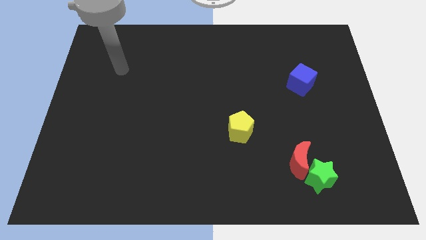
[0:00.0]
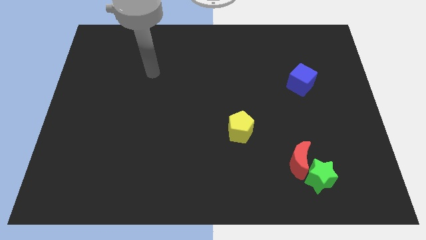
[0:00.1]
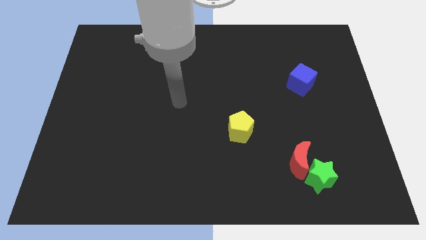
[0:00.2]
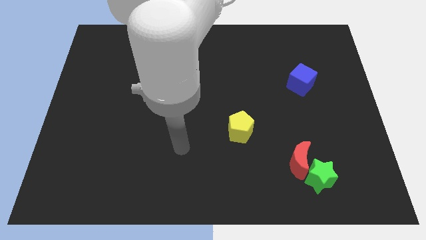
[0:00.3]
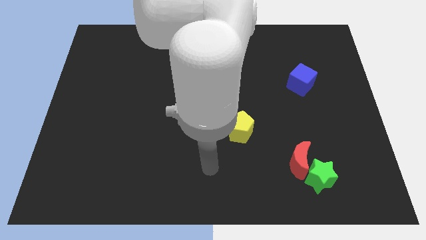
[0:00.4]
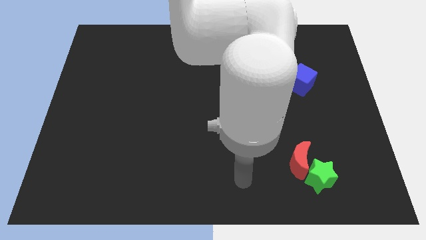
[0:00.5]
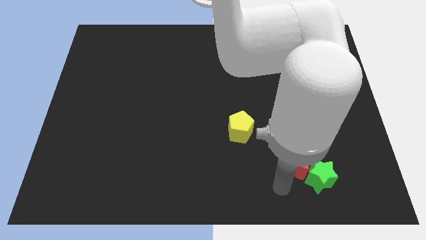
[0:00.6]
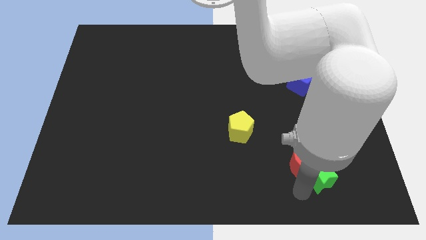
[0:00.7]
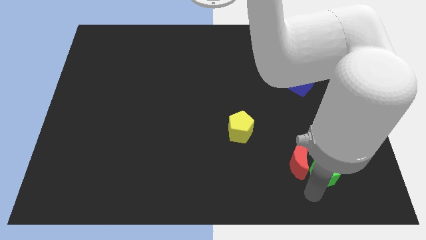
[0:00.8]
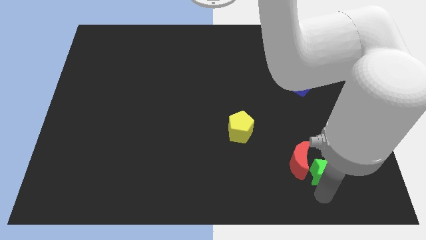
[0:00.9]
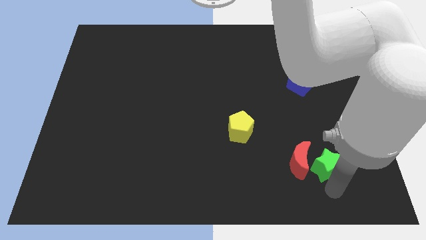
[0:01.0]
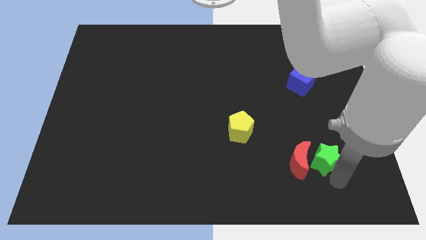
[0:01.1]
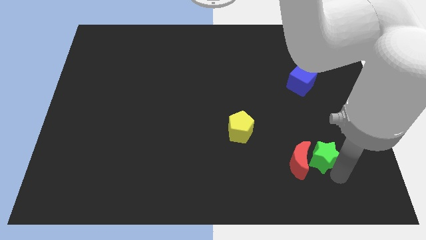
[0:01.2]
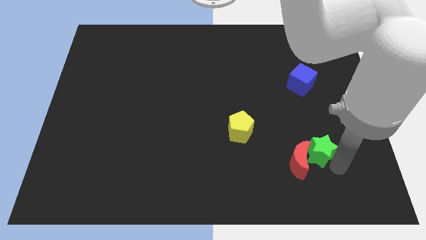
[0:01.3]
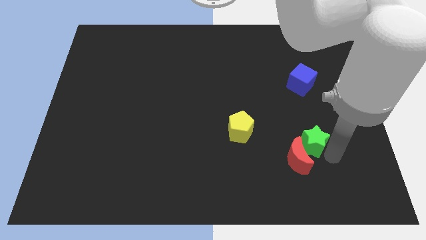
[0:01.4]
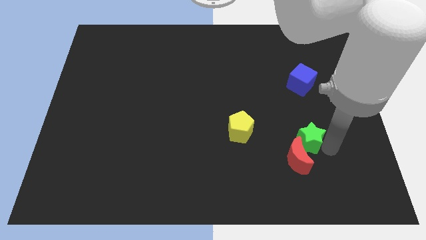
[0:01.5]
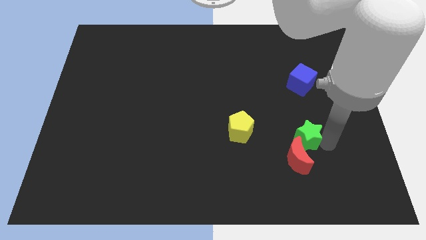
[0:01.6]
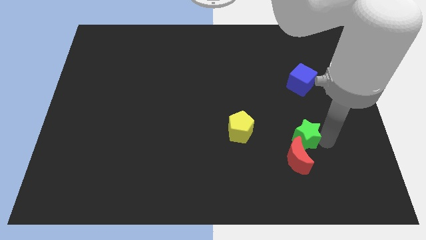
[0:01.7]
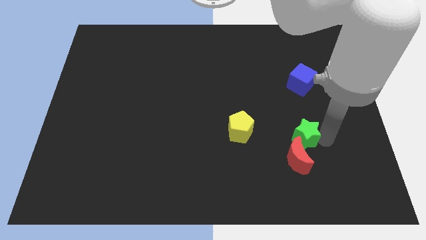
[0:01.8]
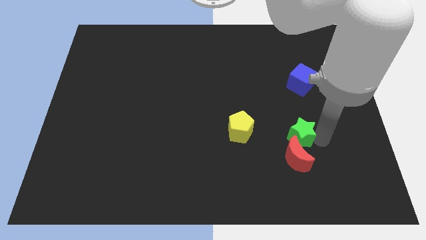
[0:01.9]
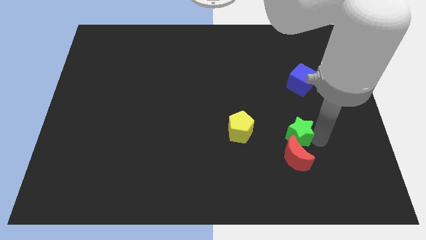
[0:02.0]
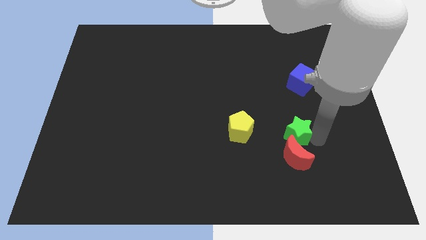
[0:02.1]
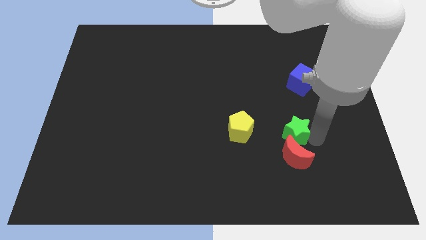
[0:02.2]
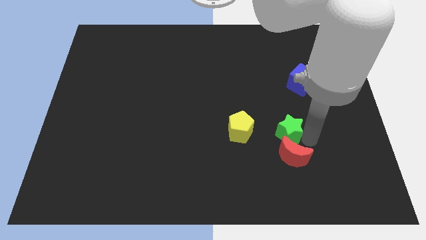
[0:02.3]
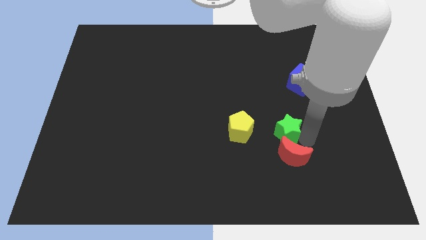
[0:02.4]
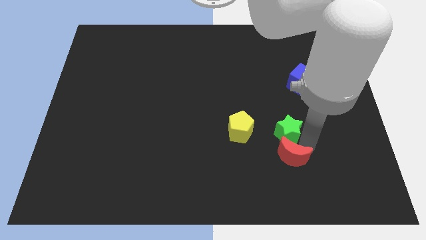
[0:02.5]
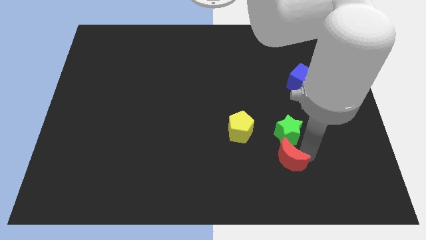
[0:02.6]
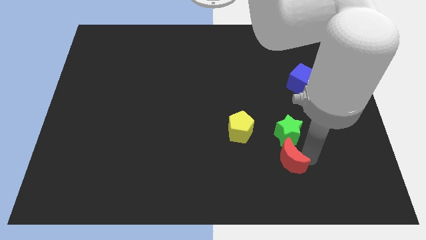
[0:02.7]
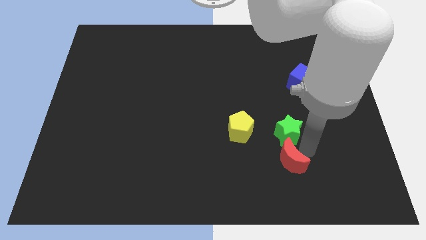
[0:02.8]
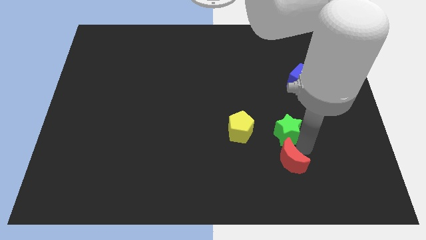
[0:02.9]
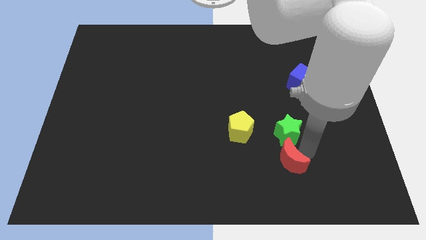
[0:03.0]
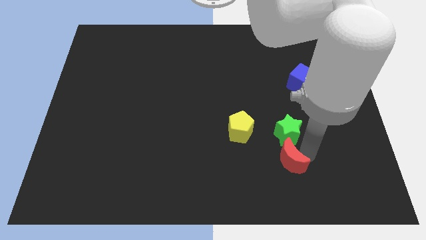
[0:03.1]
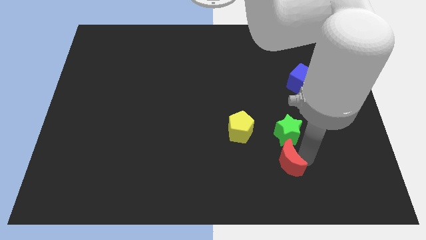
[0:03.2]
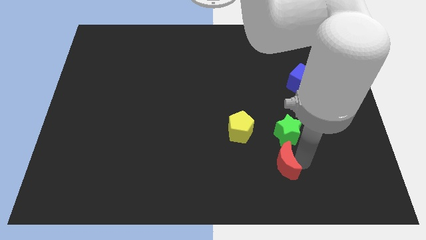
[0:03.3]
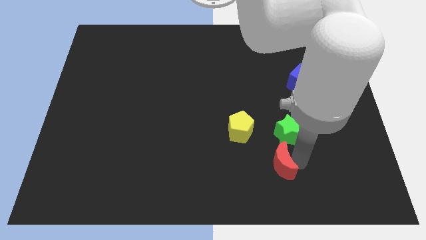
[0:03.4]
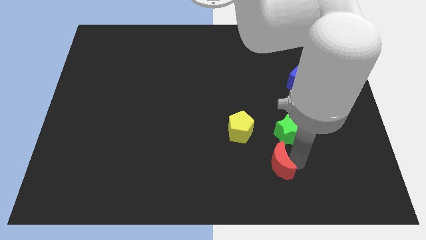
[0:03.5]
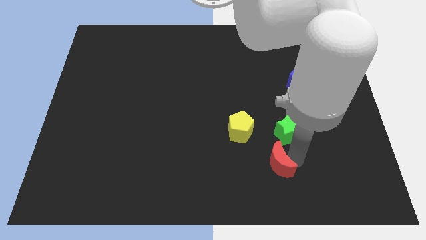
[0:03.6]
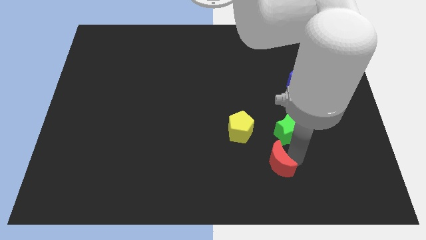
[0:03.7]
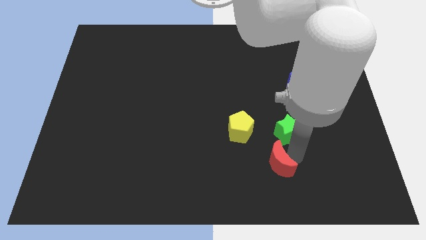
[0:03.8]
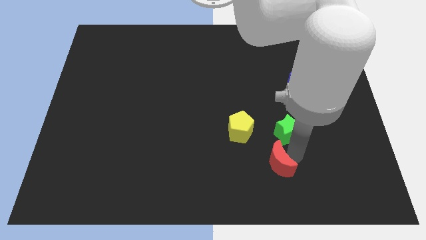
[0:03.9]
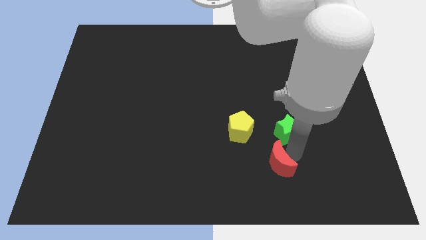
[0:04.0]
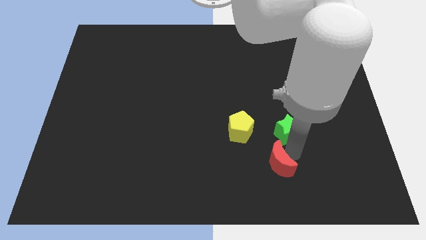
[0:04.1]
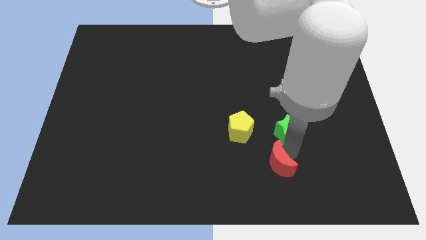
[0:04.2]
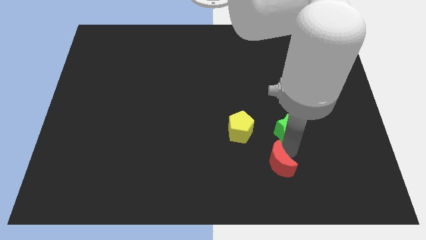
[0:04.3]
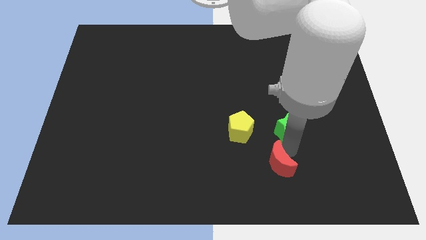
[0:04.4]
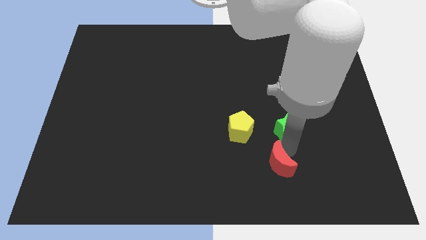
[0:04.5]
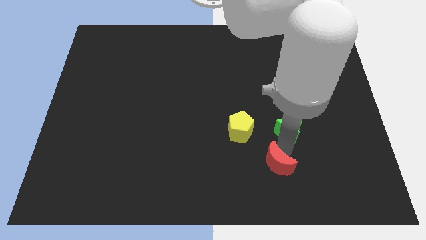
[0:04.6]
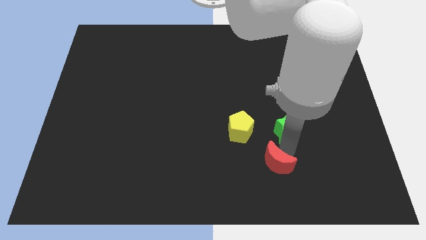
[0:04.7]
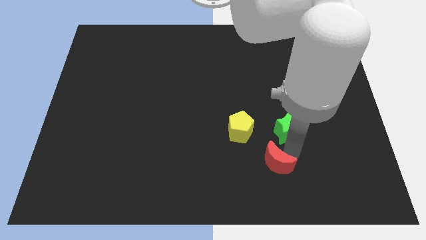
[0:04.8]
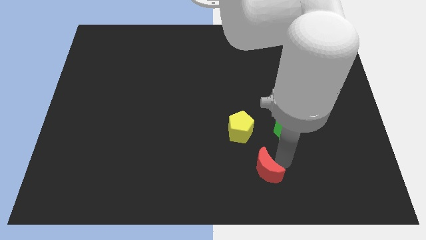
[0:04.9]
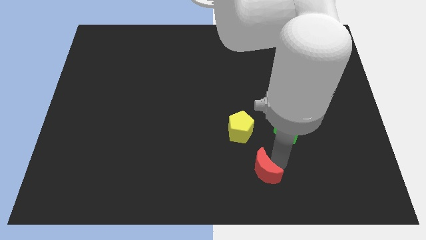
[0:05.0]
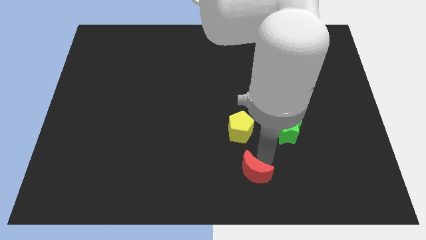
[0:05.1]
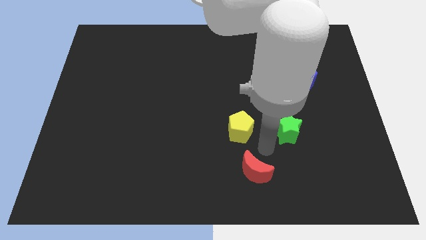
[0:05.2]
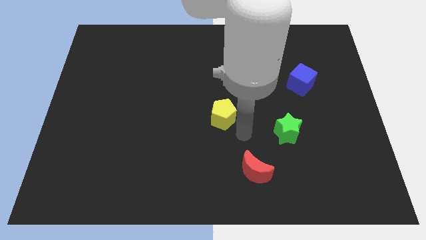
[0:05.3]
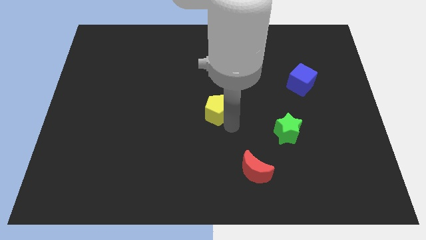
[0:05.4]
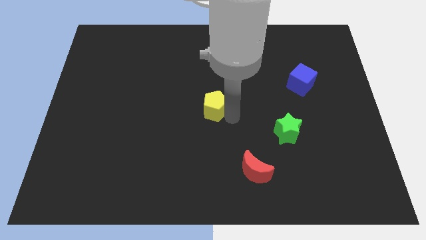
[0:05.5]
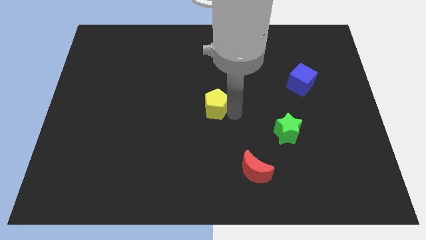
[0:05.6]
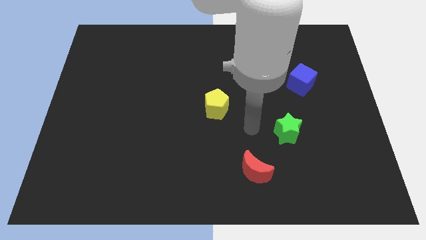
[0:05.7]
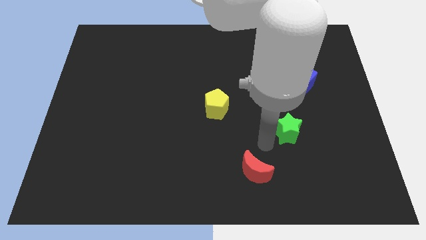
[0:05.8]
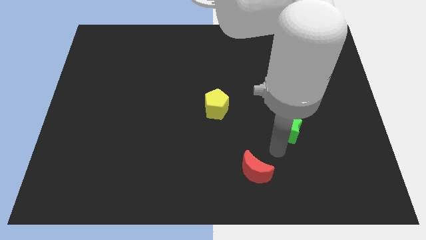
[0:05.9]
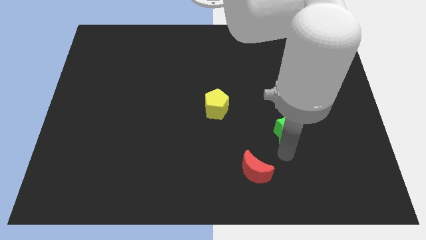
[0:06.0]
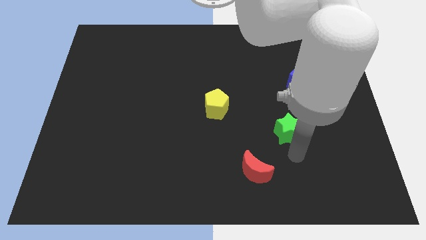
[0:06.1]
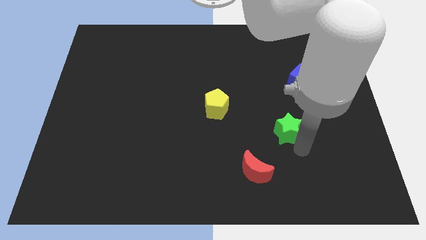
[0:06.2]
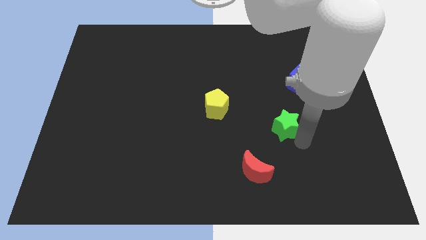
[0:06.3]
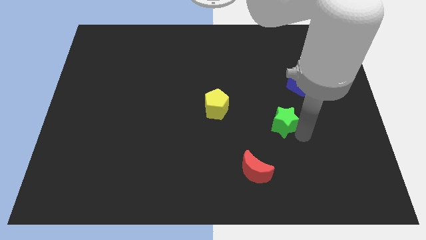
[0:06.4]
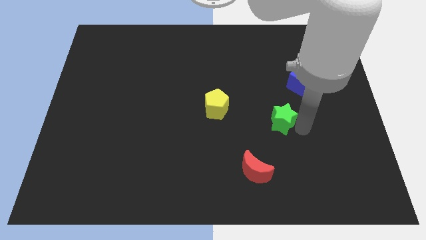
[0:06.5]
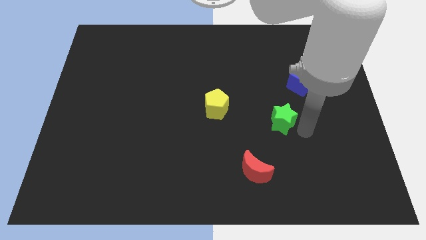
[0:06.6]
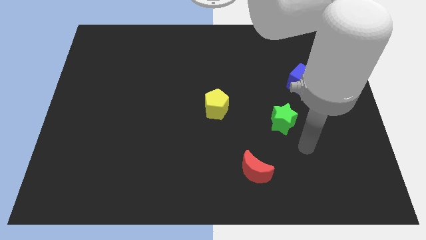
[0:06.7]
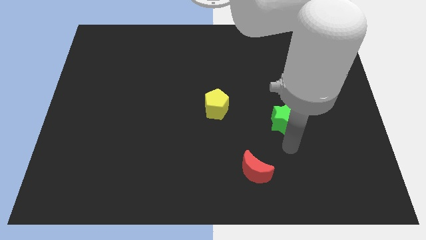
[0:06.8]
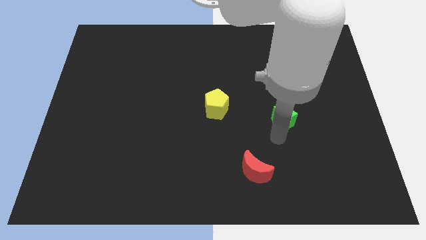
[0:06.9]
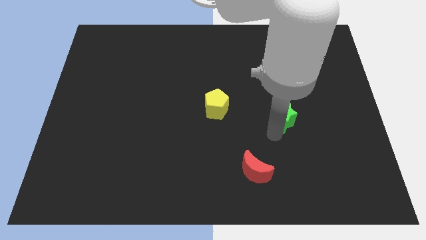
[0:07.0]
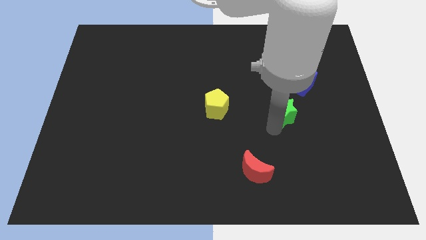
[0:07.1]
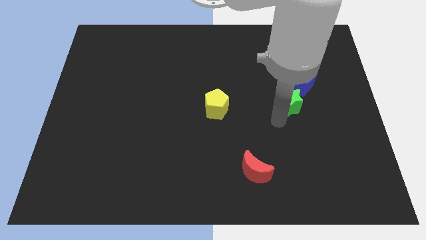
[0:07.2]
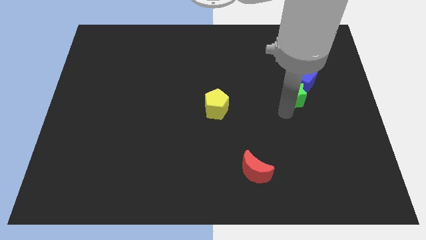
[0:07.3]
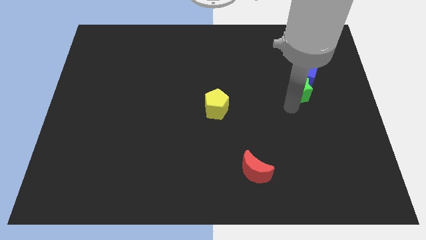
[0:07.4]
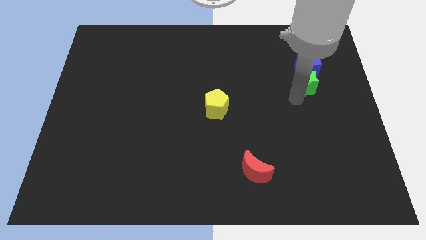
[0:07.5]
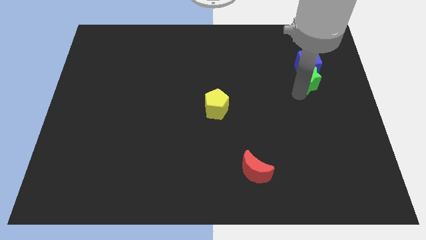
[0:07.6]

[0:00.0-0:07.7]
slide the star close to the cube

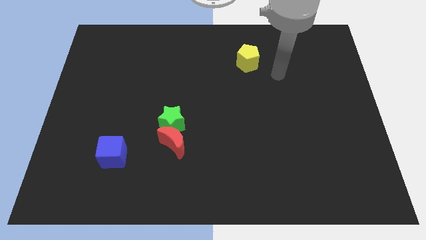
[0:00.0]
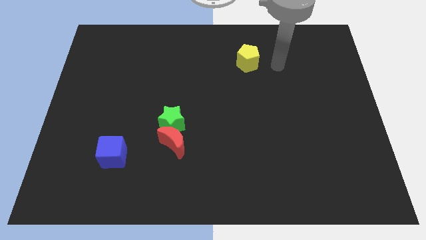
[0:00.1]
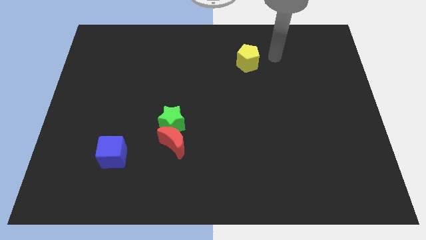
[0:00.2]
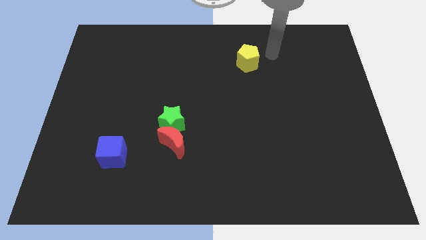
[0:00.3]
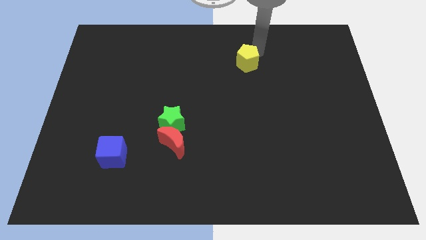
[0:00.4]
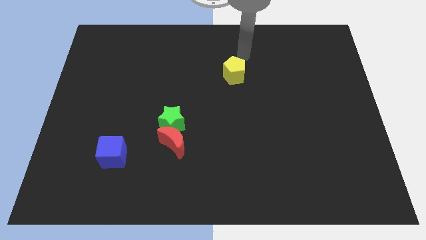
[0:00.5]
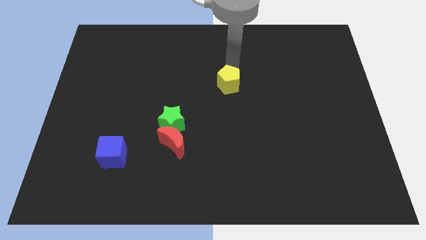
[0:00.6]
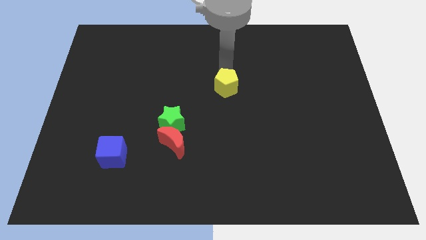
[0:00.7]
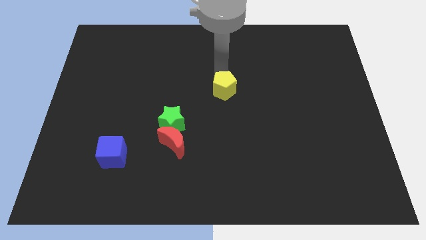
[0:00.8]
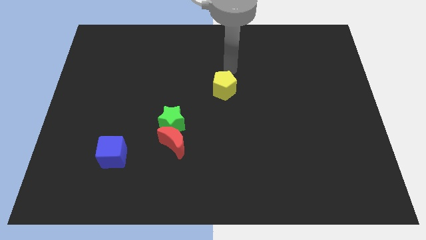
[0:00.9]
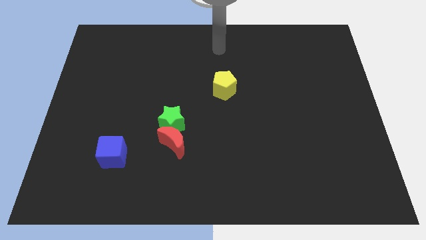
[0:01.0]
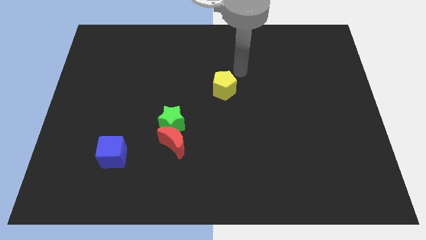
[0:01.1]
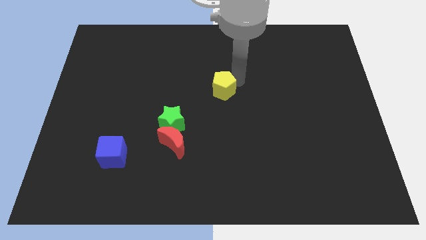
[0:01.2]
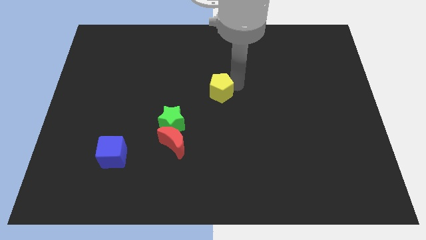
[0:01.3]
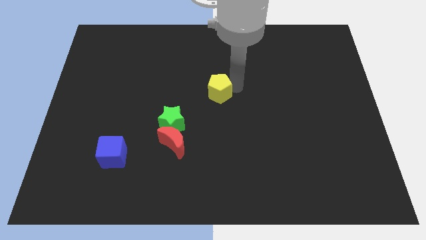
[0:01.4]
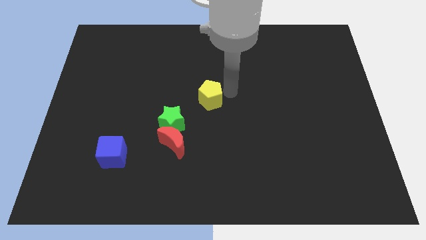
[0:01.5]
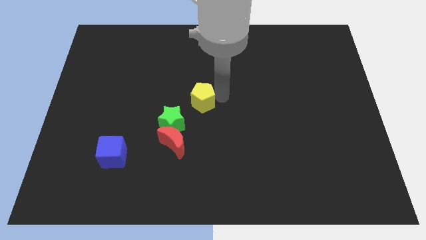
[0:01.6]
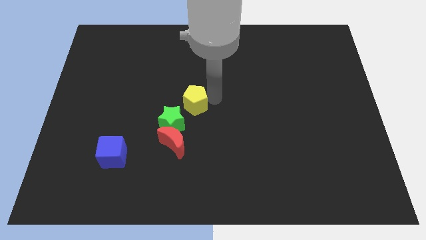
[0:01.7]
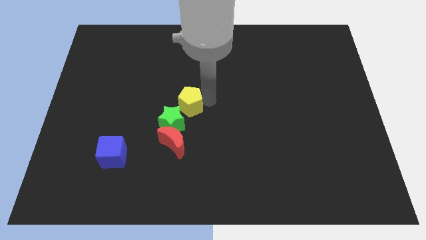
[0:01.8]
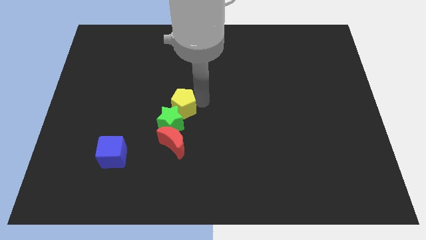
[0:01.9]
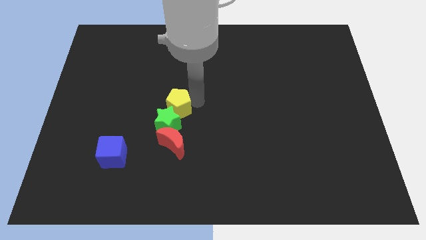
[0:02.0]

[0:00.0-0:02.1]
put the pentagon close to the green star
